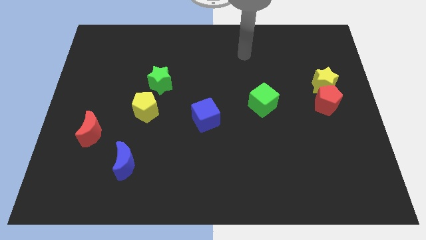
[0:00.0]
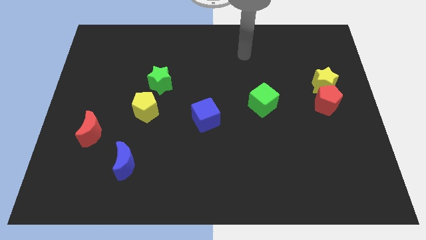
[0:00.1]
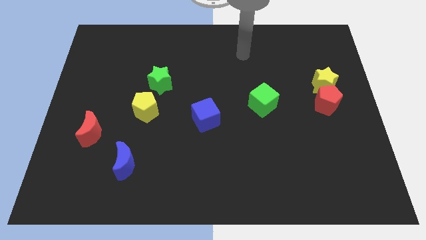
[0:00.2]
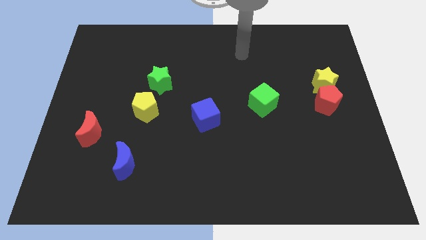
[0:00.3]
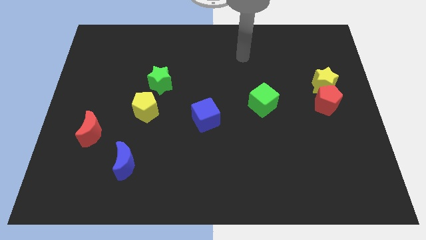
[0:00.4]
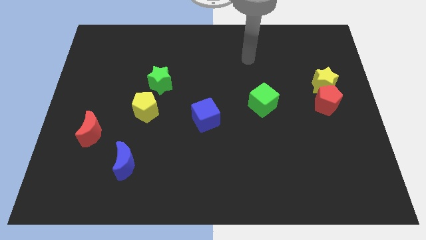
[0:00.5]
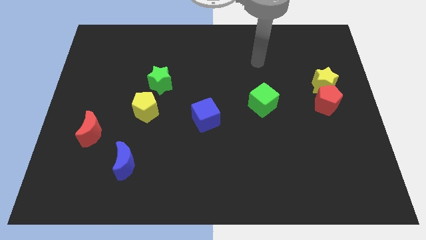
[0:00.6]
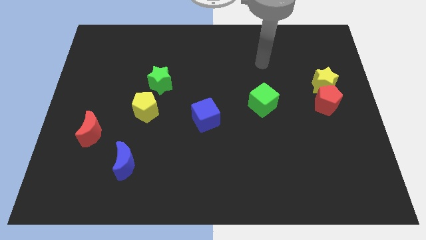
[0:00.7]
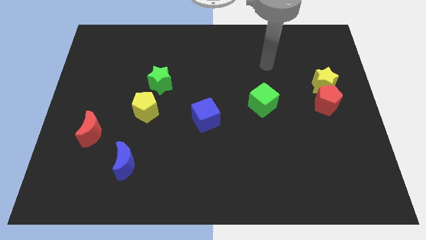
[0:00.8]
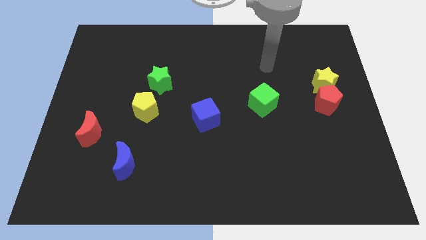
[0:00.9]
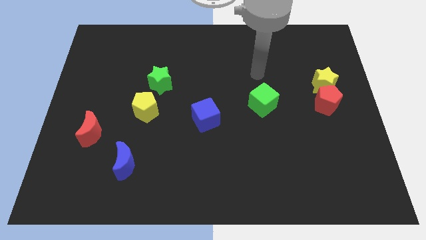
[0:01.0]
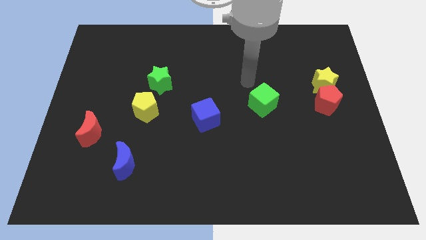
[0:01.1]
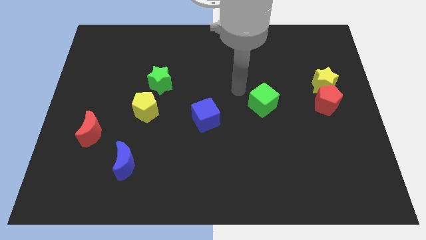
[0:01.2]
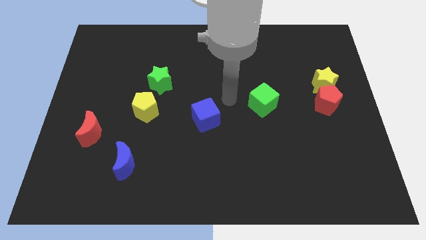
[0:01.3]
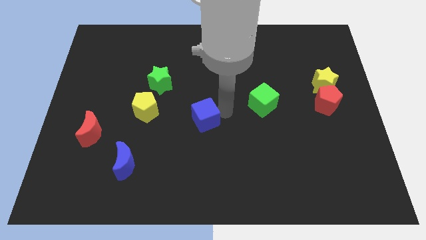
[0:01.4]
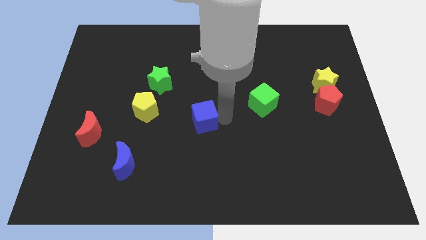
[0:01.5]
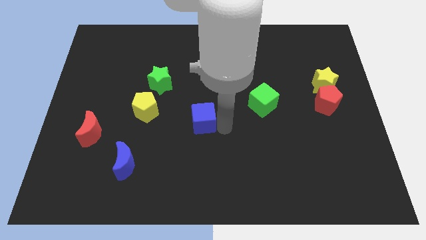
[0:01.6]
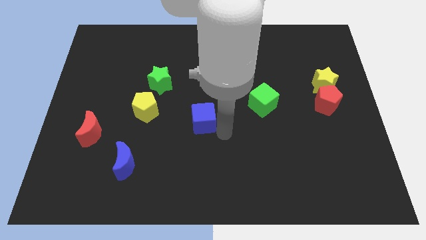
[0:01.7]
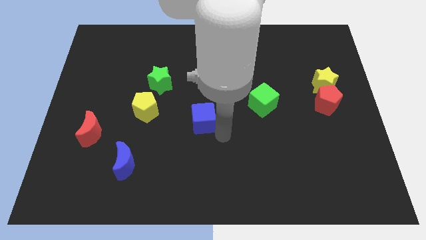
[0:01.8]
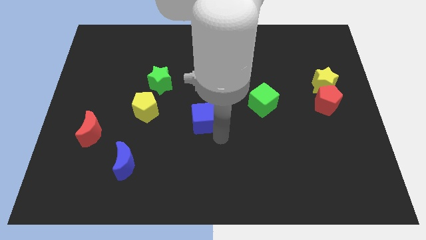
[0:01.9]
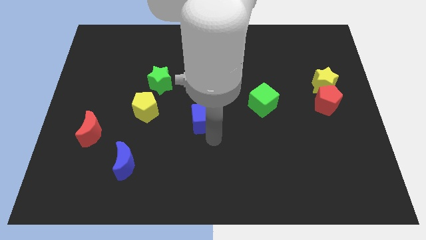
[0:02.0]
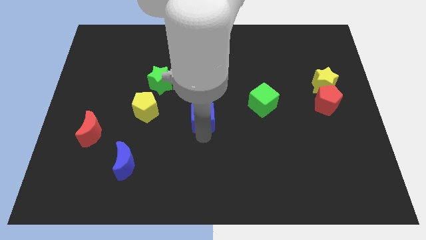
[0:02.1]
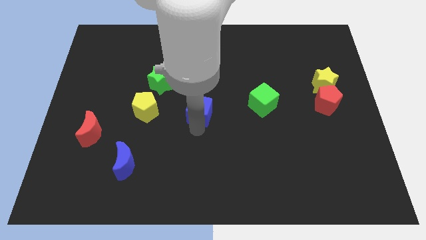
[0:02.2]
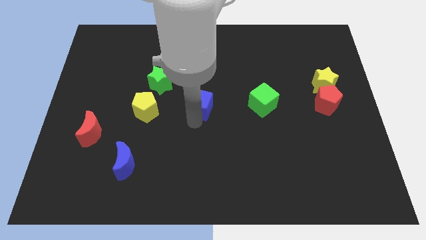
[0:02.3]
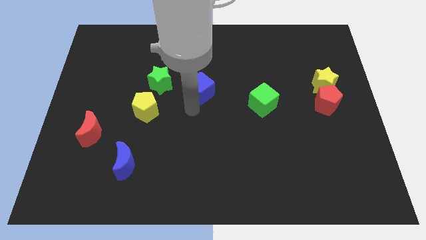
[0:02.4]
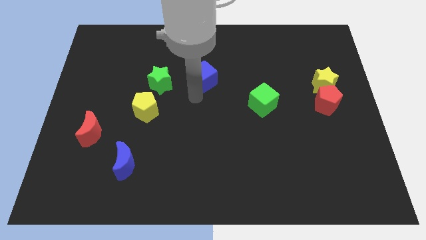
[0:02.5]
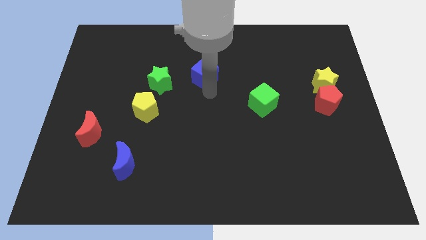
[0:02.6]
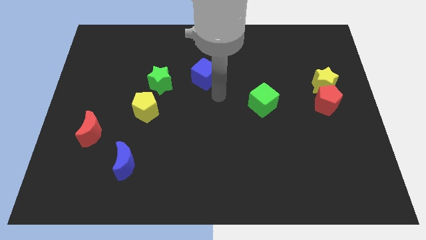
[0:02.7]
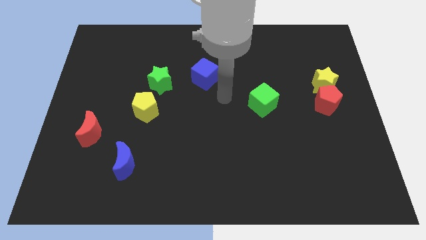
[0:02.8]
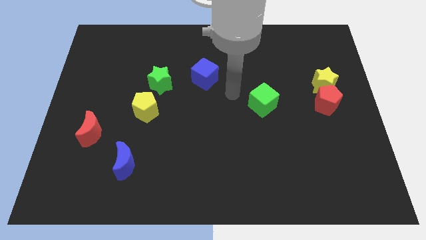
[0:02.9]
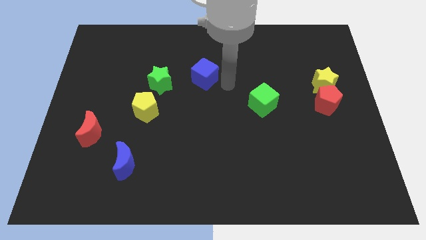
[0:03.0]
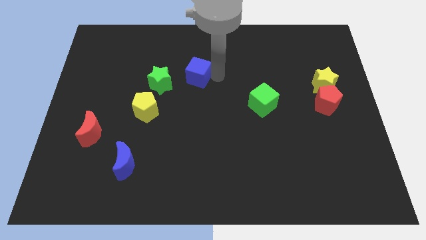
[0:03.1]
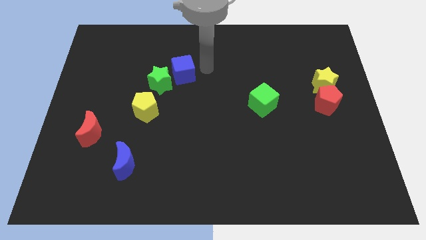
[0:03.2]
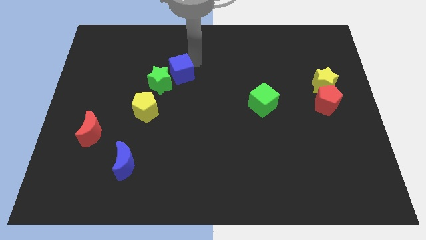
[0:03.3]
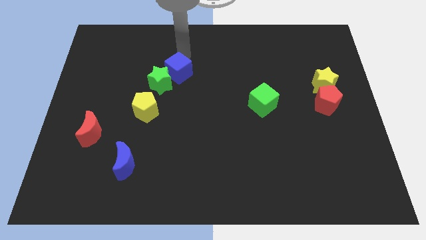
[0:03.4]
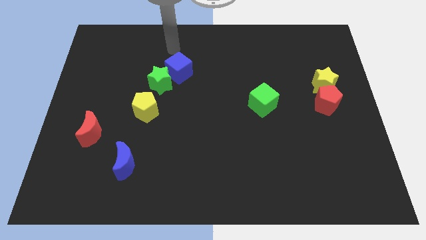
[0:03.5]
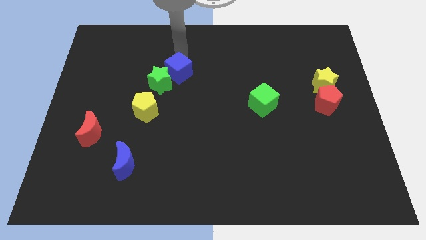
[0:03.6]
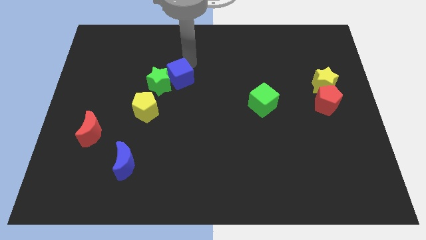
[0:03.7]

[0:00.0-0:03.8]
place the blue cube diagonally to the green star

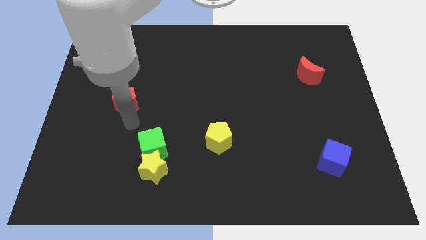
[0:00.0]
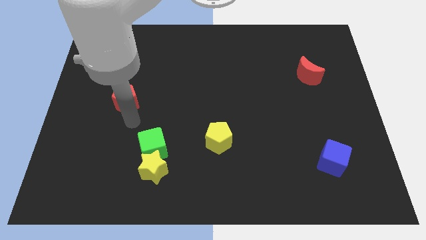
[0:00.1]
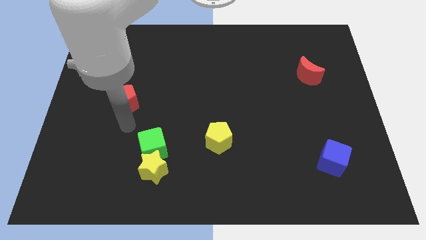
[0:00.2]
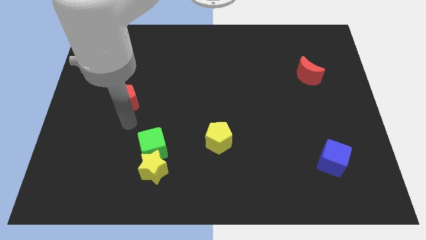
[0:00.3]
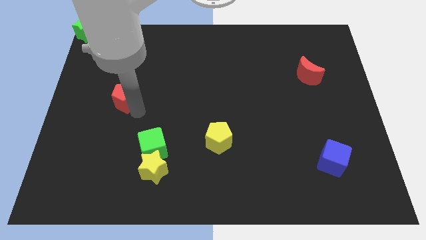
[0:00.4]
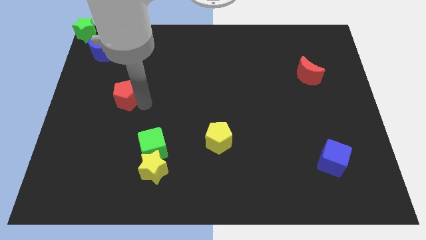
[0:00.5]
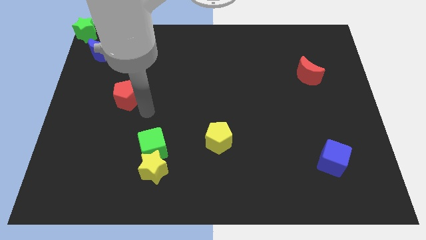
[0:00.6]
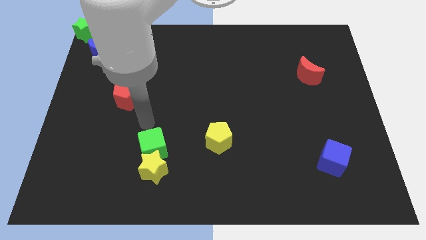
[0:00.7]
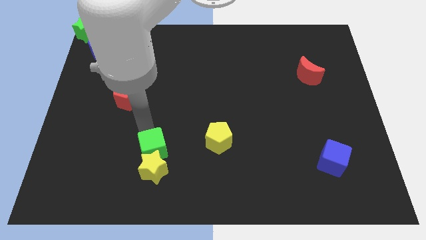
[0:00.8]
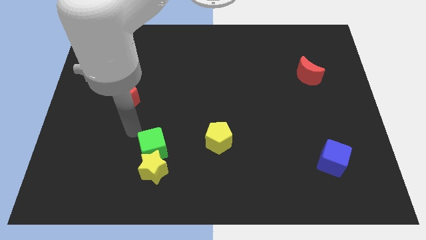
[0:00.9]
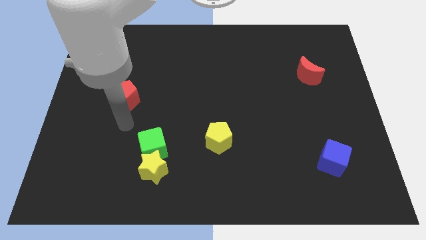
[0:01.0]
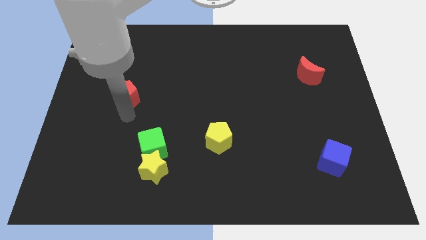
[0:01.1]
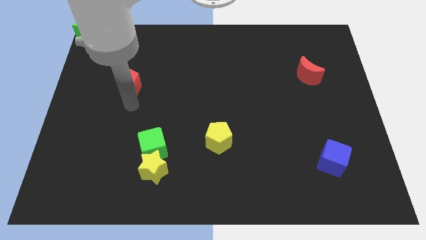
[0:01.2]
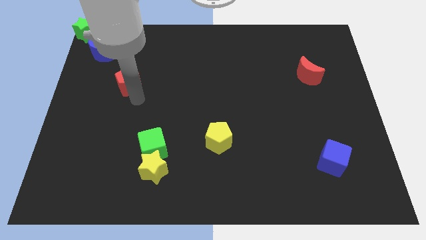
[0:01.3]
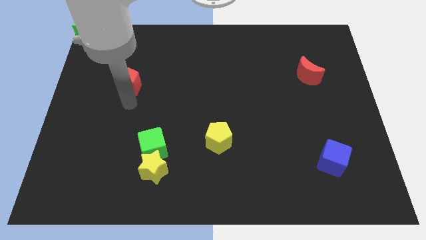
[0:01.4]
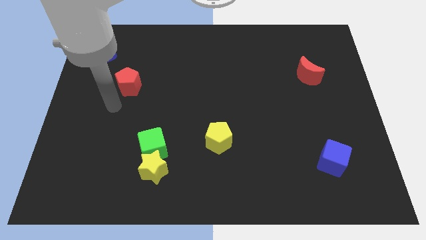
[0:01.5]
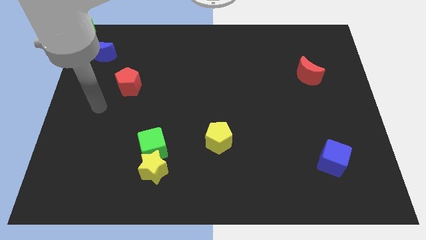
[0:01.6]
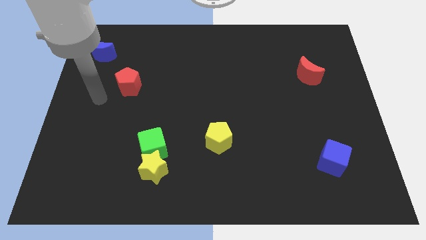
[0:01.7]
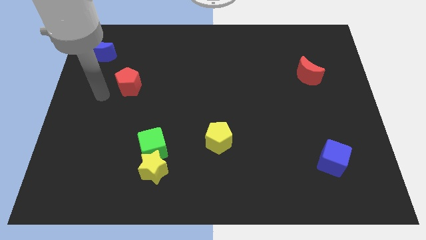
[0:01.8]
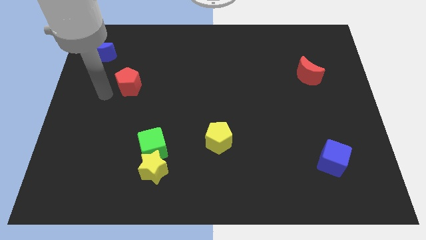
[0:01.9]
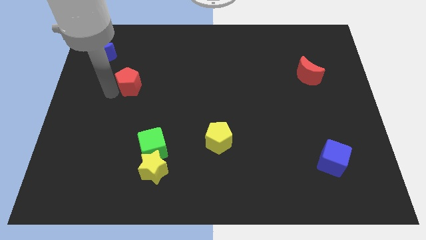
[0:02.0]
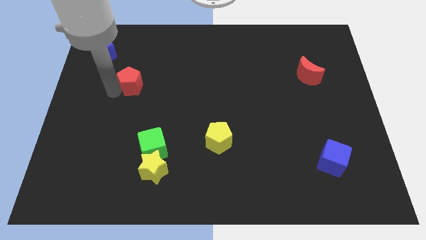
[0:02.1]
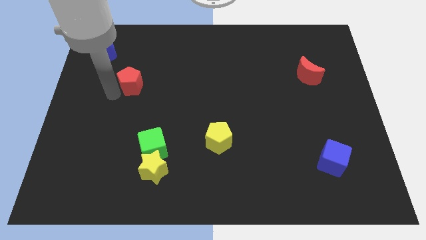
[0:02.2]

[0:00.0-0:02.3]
place the red pentagon right below the blue moon

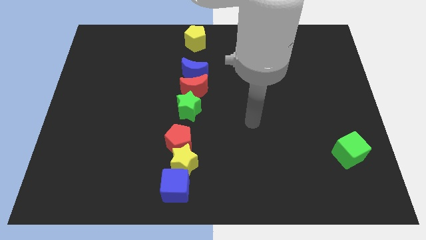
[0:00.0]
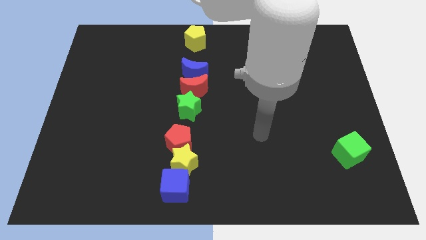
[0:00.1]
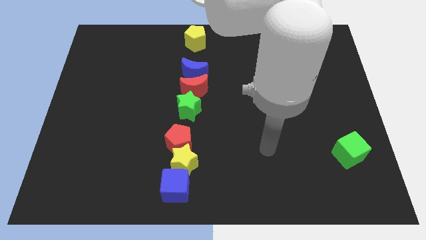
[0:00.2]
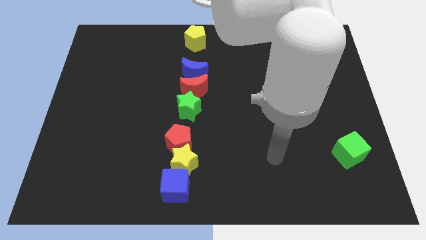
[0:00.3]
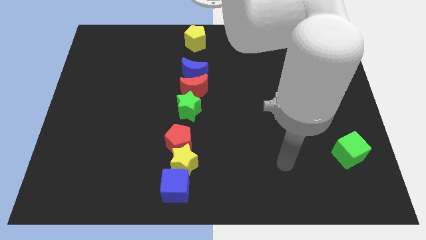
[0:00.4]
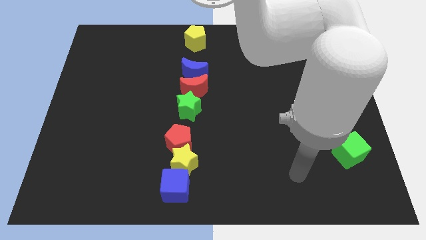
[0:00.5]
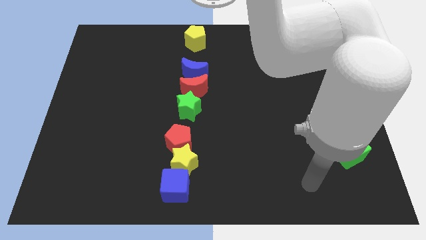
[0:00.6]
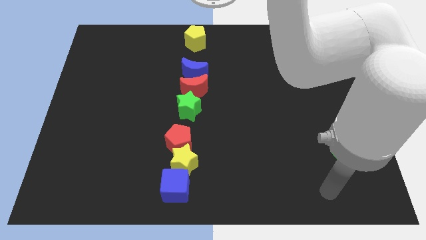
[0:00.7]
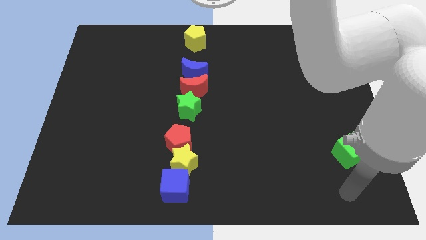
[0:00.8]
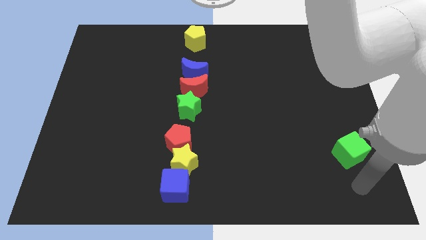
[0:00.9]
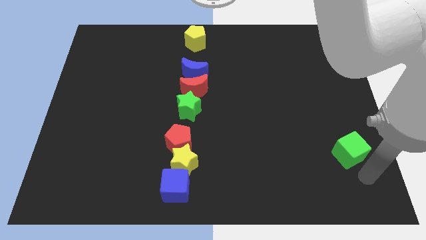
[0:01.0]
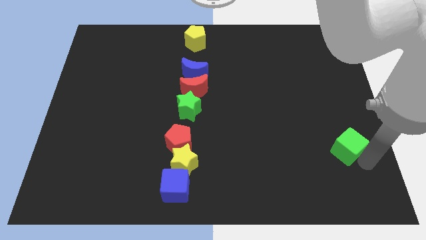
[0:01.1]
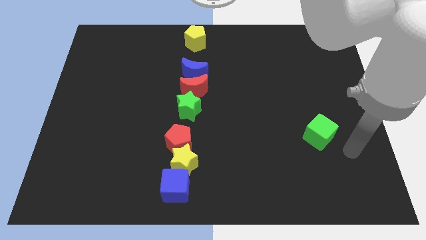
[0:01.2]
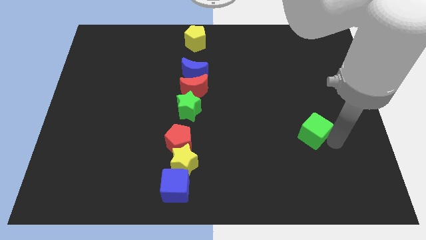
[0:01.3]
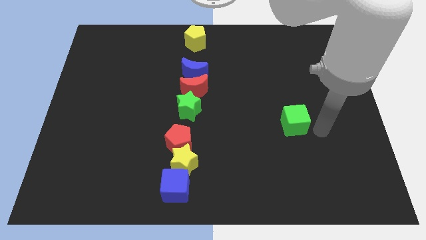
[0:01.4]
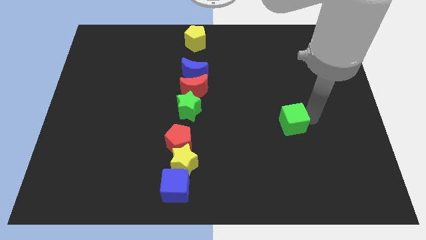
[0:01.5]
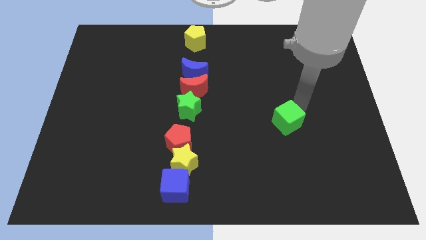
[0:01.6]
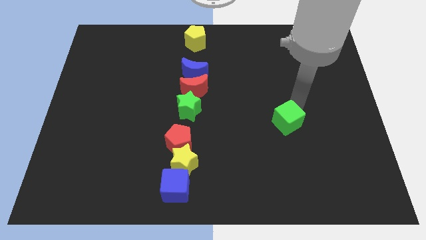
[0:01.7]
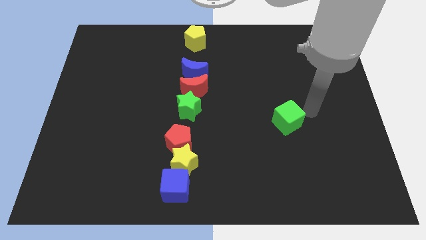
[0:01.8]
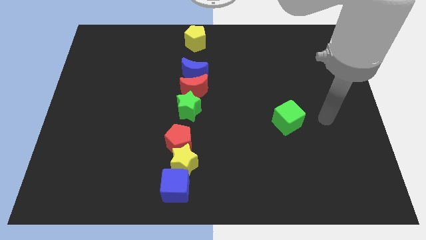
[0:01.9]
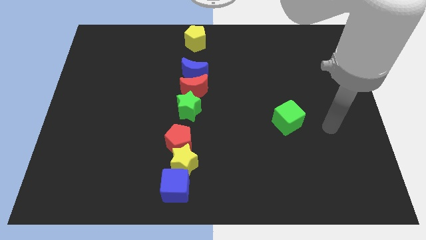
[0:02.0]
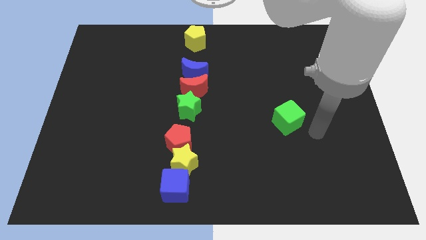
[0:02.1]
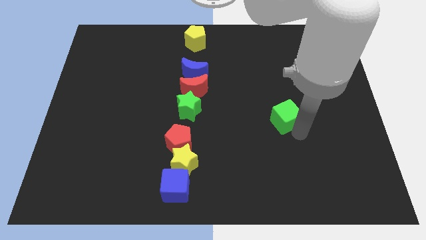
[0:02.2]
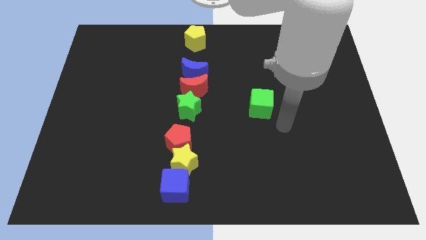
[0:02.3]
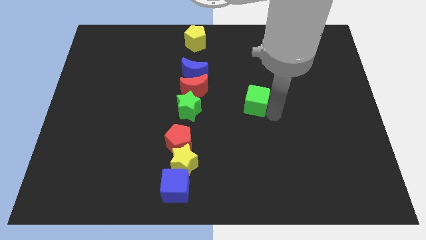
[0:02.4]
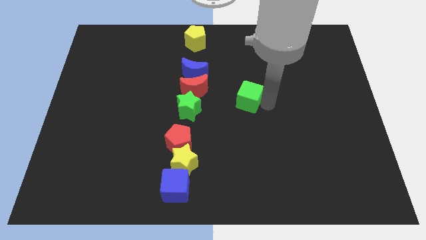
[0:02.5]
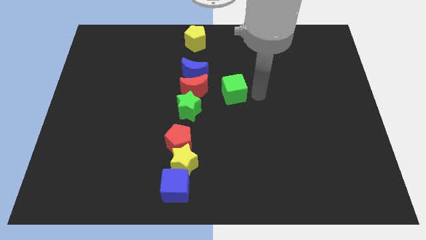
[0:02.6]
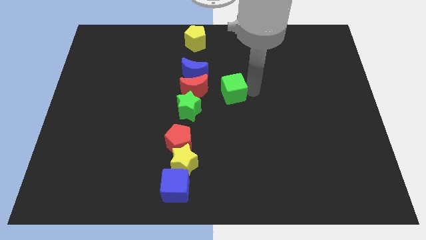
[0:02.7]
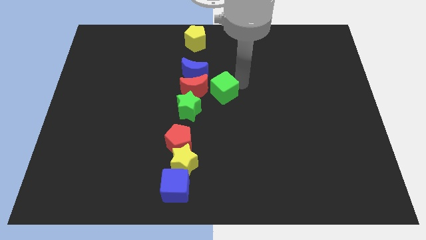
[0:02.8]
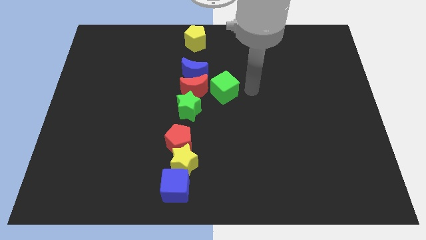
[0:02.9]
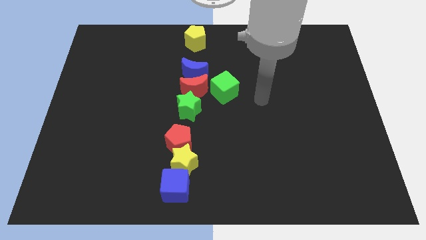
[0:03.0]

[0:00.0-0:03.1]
move the green cube right to the red crescent
